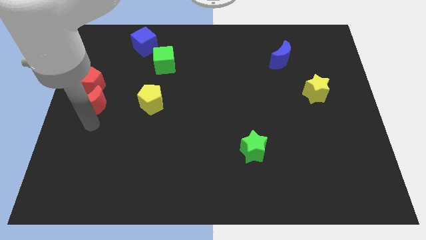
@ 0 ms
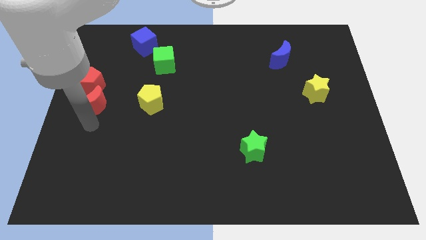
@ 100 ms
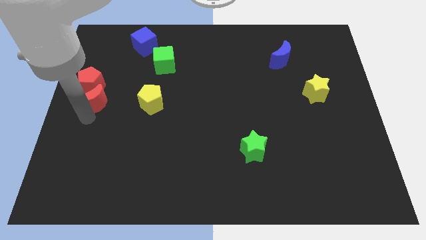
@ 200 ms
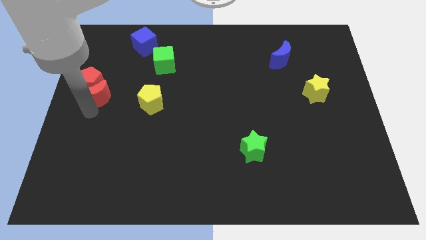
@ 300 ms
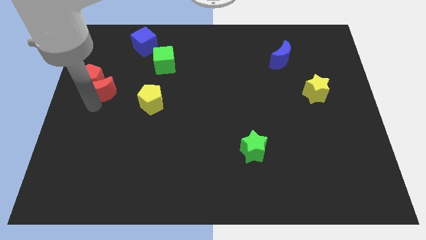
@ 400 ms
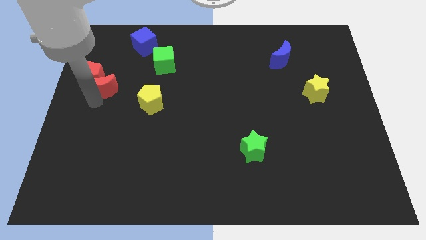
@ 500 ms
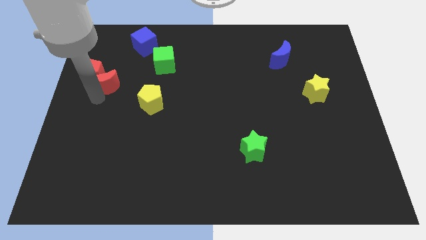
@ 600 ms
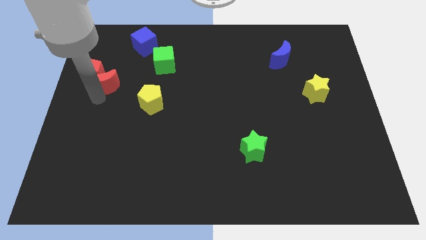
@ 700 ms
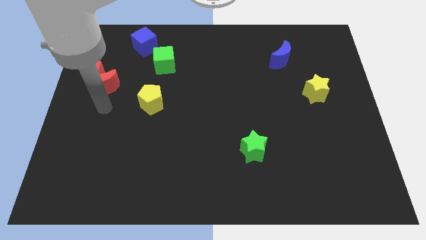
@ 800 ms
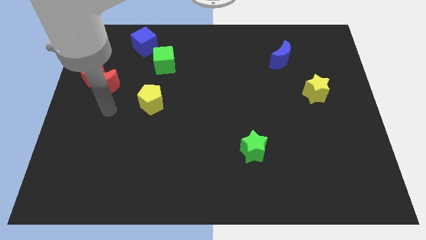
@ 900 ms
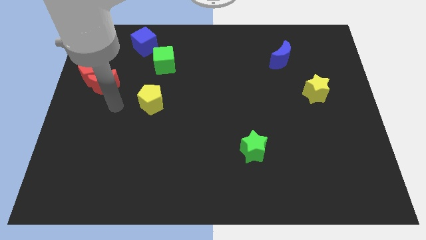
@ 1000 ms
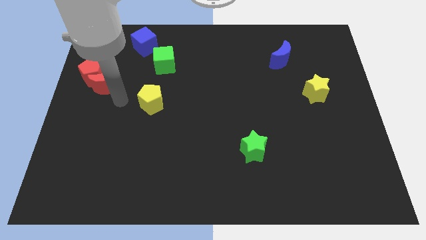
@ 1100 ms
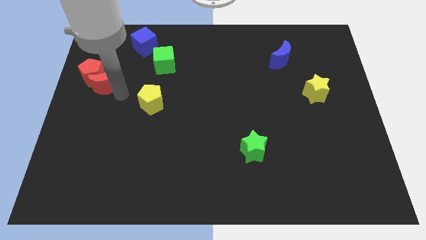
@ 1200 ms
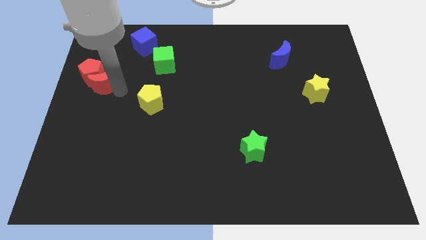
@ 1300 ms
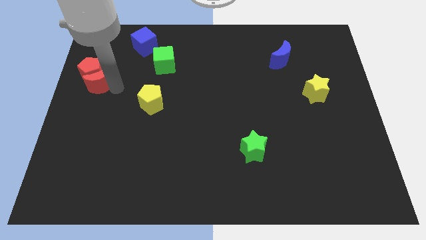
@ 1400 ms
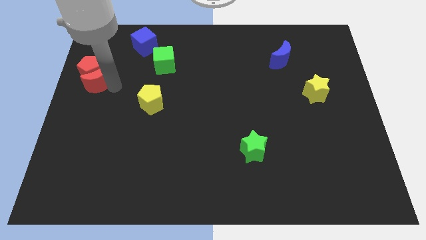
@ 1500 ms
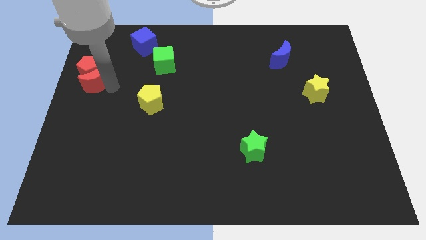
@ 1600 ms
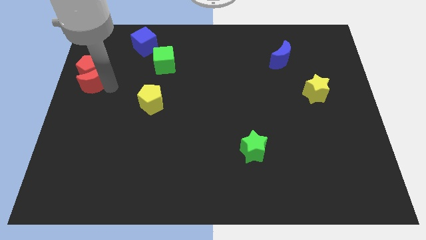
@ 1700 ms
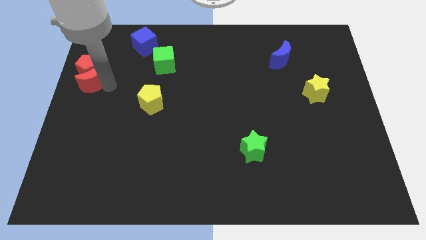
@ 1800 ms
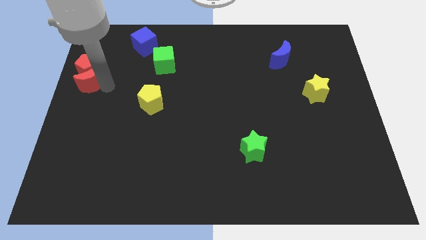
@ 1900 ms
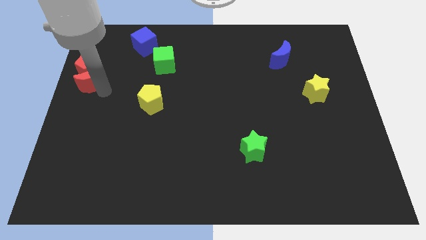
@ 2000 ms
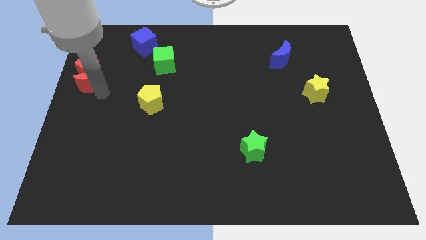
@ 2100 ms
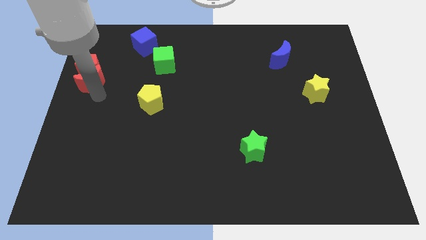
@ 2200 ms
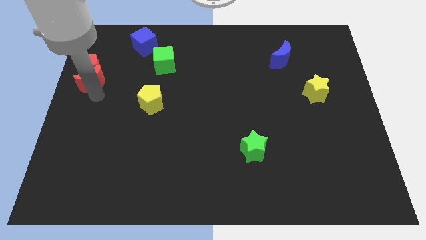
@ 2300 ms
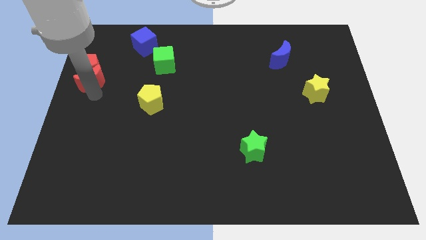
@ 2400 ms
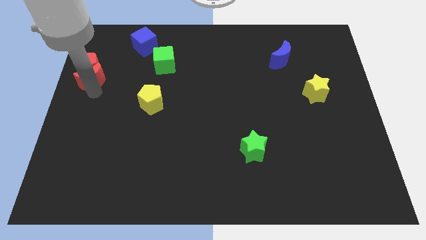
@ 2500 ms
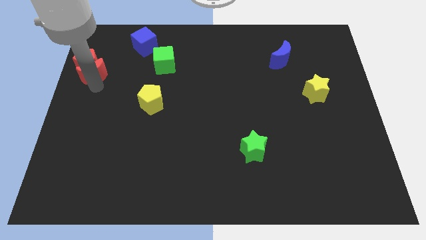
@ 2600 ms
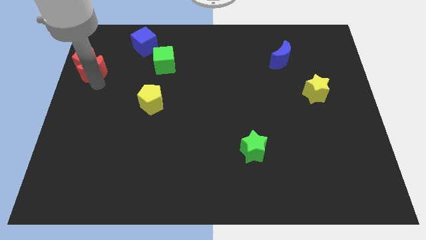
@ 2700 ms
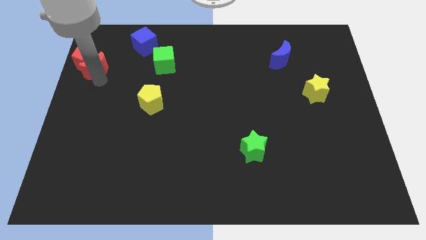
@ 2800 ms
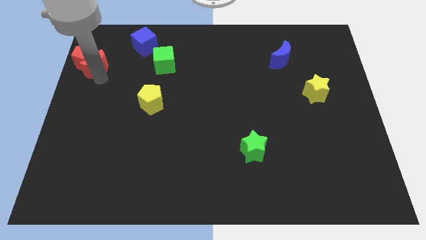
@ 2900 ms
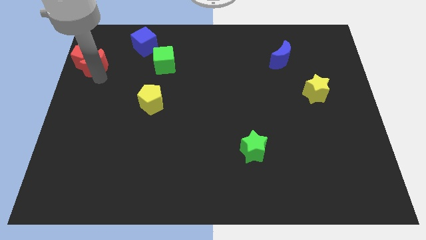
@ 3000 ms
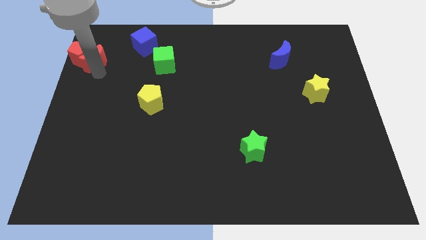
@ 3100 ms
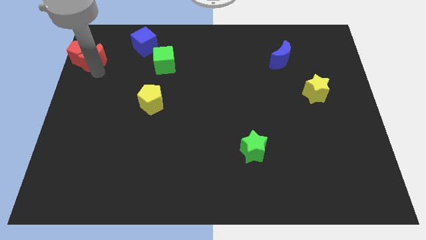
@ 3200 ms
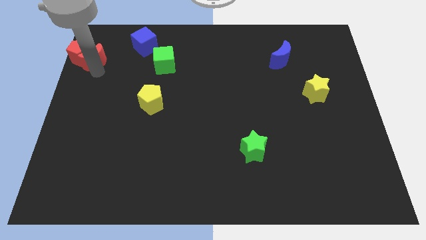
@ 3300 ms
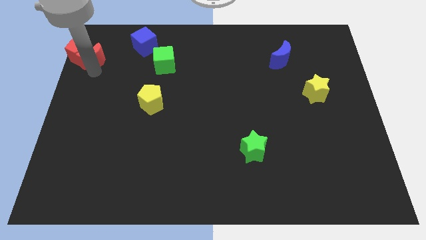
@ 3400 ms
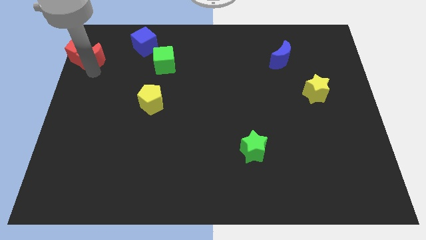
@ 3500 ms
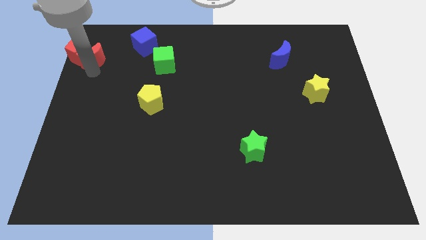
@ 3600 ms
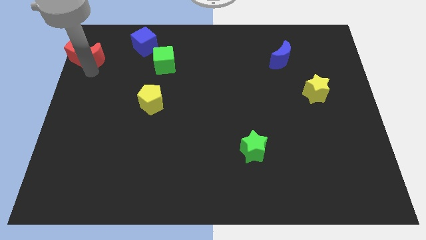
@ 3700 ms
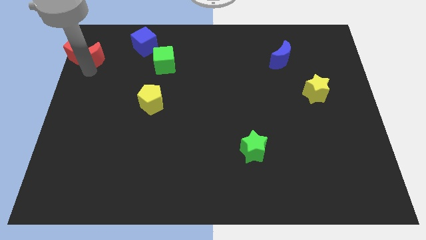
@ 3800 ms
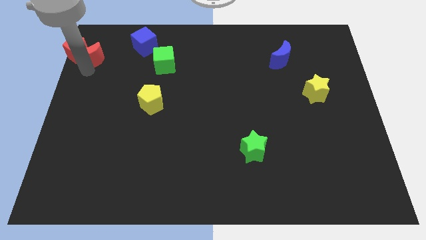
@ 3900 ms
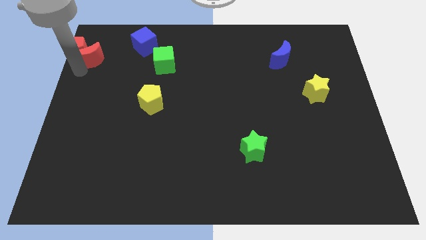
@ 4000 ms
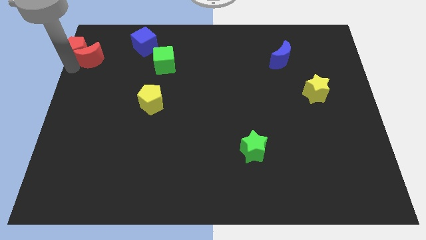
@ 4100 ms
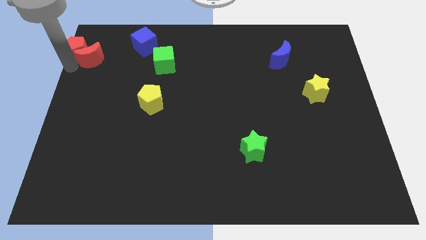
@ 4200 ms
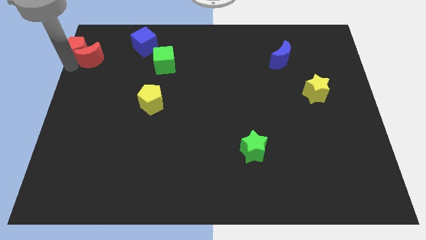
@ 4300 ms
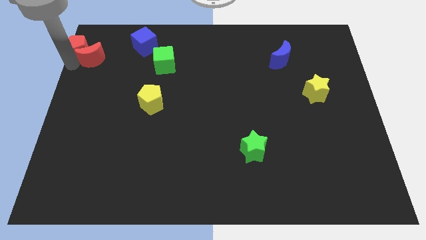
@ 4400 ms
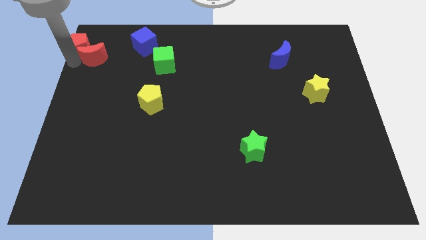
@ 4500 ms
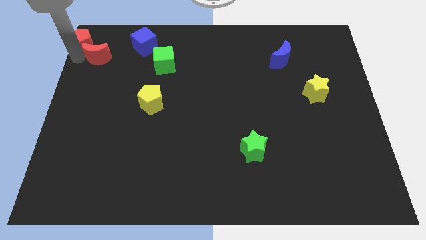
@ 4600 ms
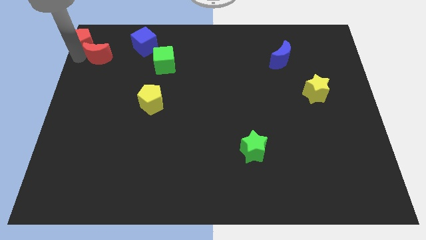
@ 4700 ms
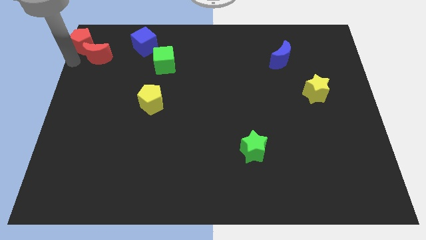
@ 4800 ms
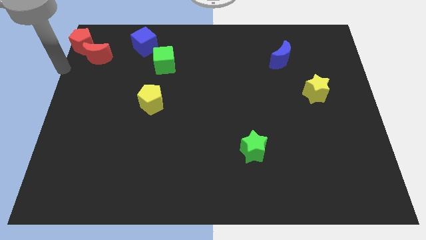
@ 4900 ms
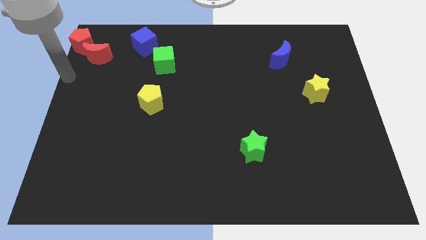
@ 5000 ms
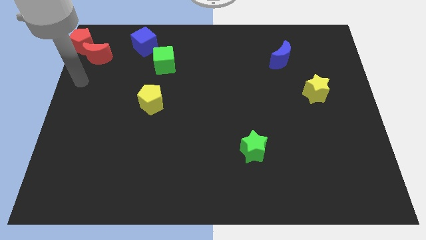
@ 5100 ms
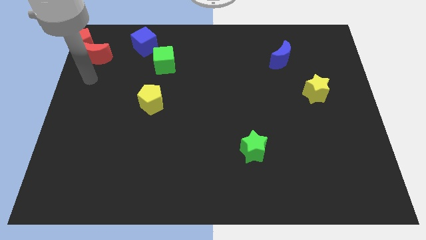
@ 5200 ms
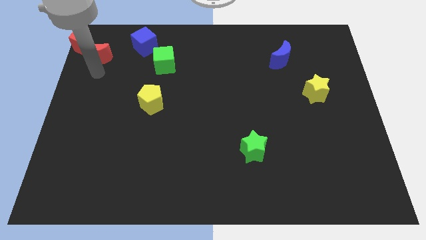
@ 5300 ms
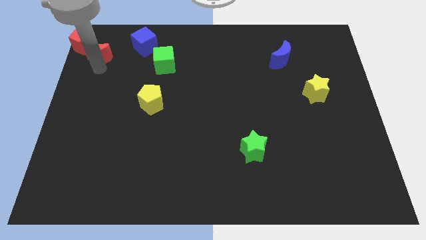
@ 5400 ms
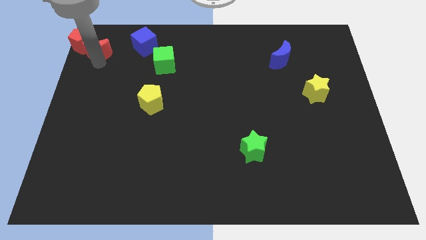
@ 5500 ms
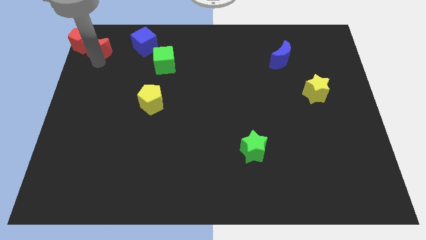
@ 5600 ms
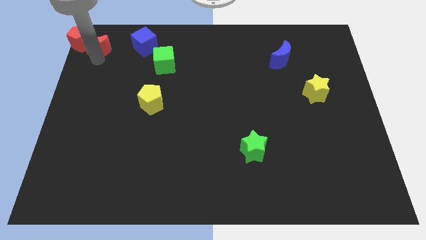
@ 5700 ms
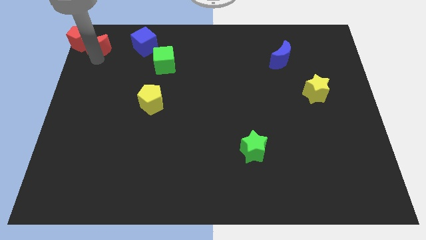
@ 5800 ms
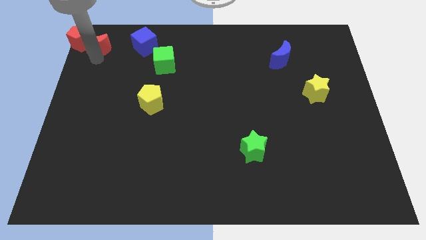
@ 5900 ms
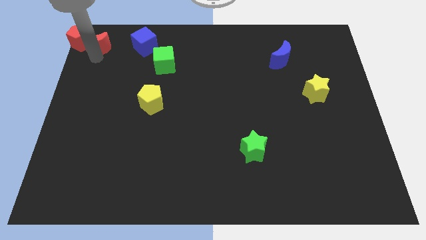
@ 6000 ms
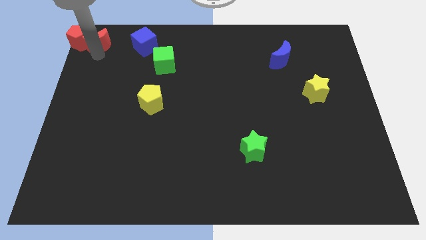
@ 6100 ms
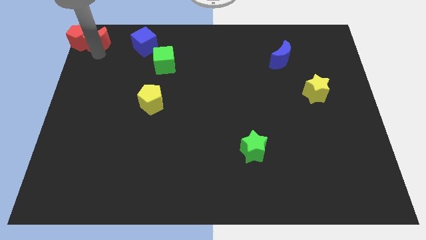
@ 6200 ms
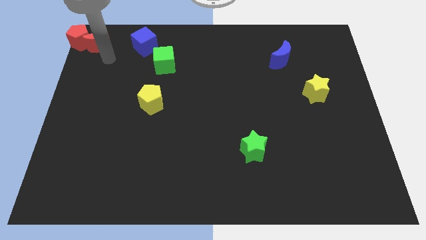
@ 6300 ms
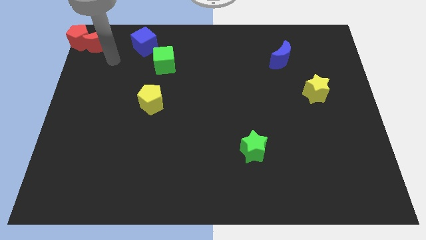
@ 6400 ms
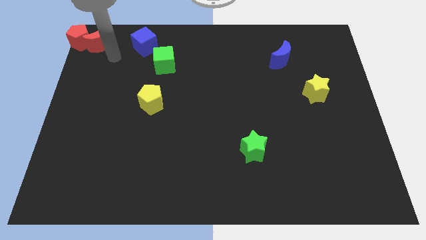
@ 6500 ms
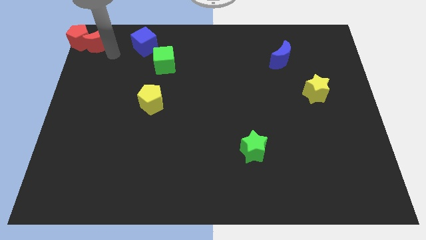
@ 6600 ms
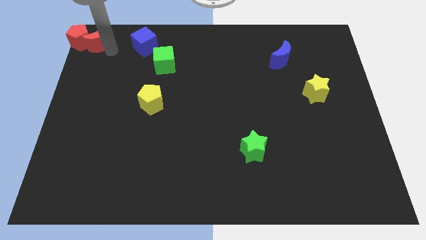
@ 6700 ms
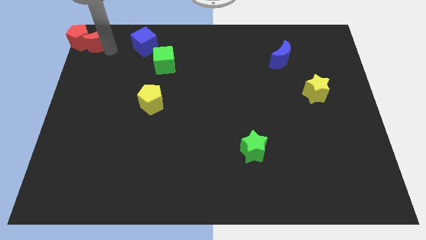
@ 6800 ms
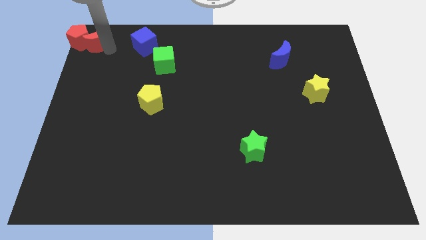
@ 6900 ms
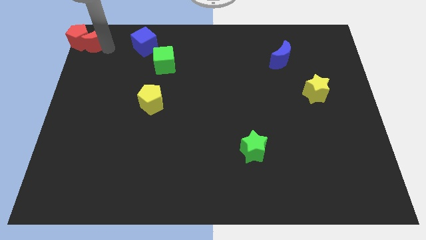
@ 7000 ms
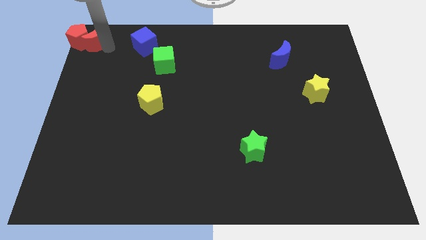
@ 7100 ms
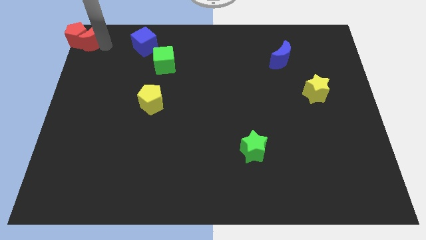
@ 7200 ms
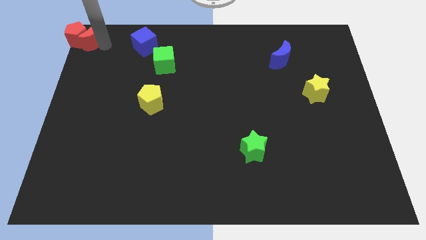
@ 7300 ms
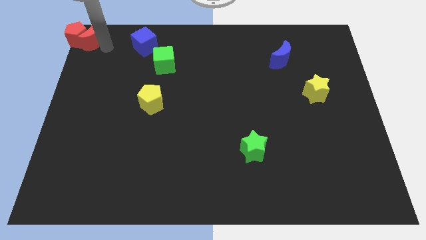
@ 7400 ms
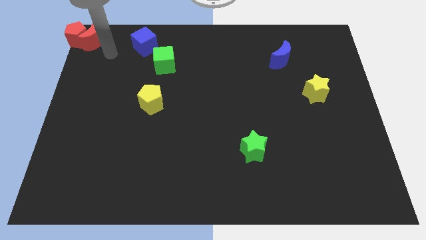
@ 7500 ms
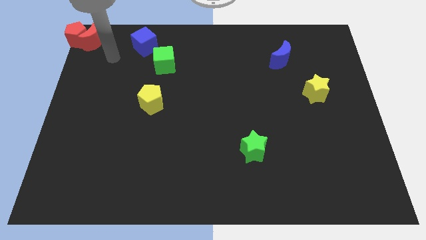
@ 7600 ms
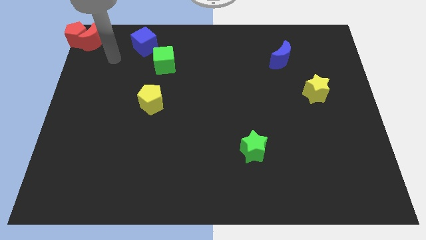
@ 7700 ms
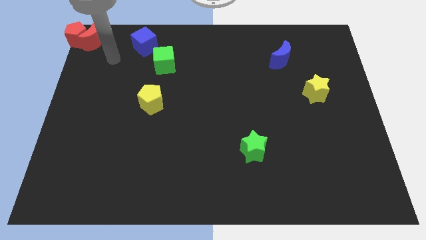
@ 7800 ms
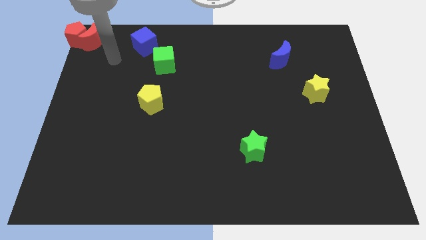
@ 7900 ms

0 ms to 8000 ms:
push the red pentagon to the top left with a red moon

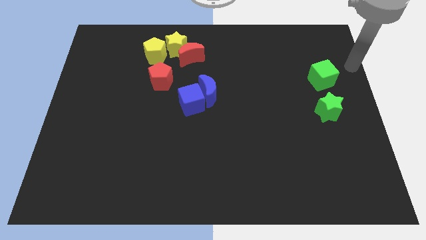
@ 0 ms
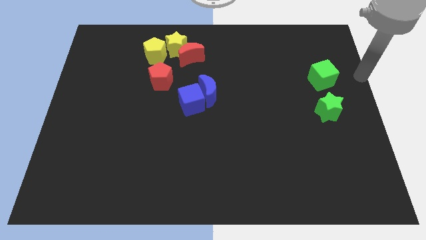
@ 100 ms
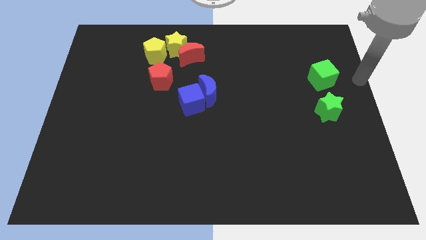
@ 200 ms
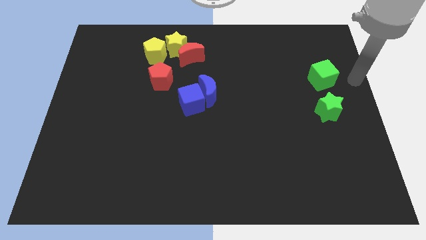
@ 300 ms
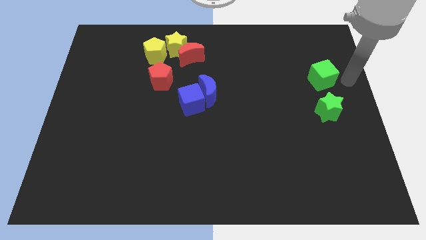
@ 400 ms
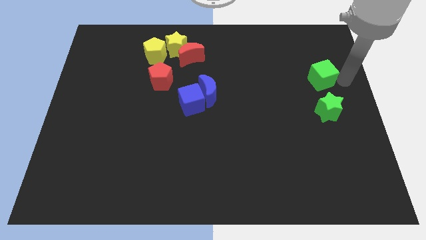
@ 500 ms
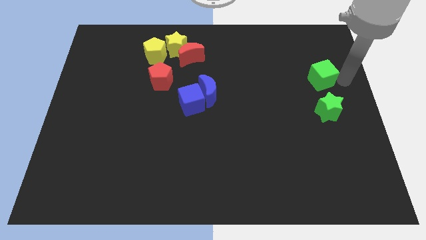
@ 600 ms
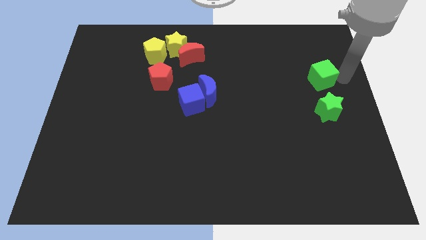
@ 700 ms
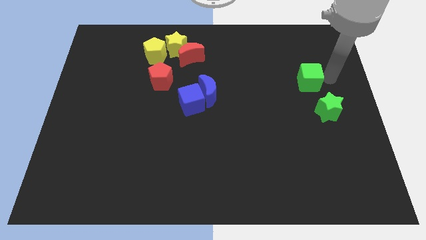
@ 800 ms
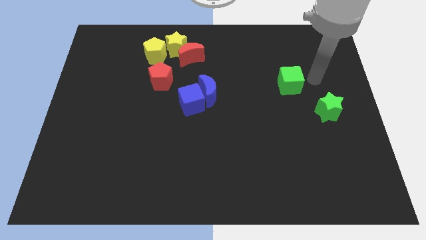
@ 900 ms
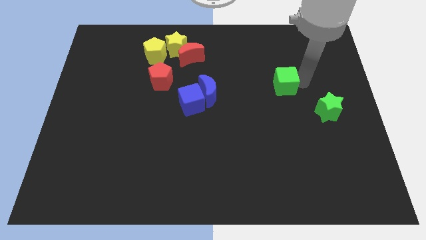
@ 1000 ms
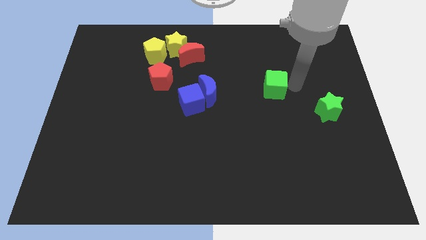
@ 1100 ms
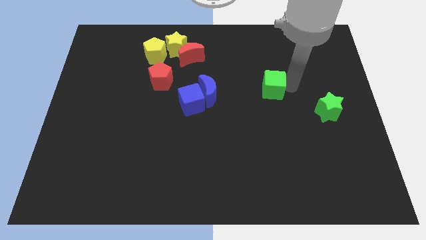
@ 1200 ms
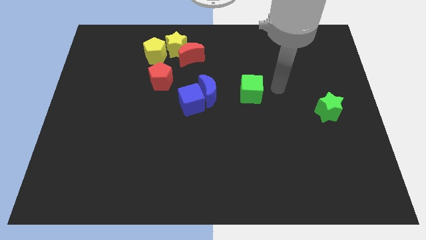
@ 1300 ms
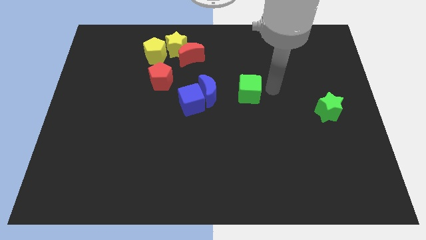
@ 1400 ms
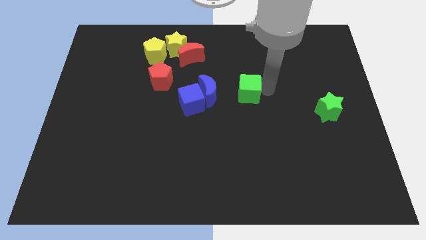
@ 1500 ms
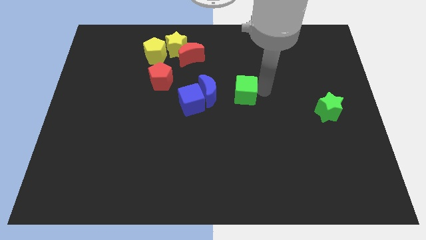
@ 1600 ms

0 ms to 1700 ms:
move the green cube towards the center of the board
